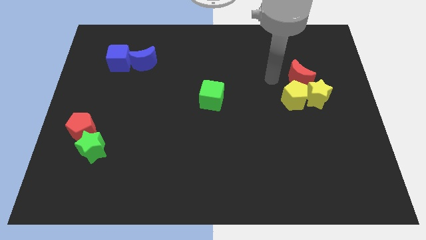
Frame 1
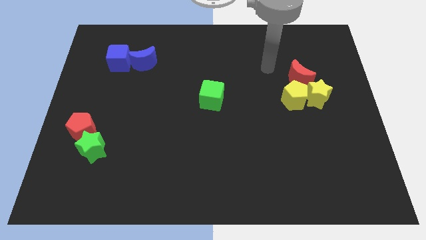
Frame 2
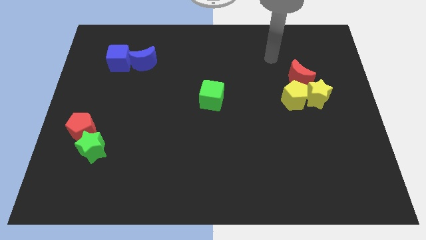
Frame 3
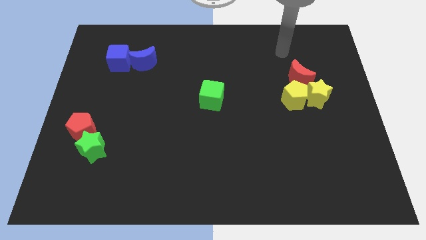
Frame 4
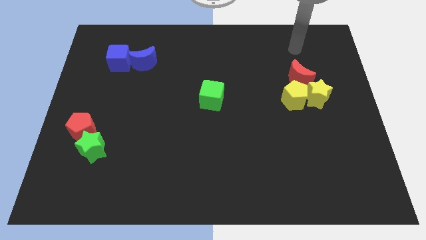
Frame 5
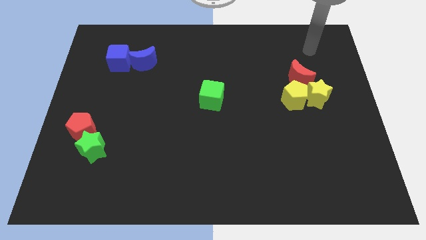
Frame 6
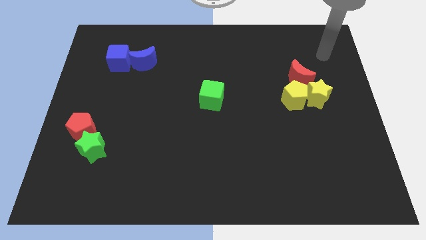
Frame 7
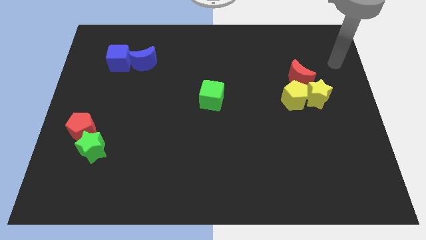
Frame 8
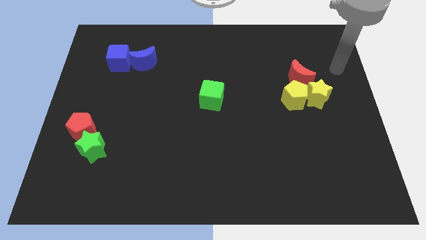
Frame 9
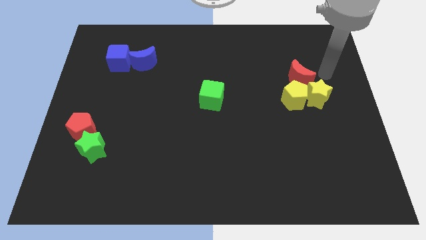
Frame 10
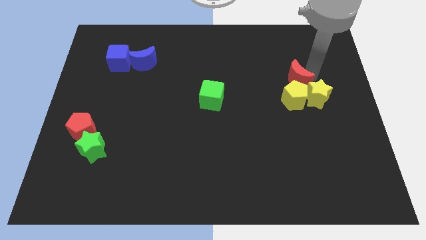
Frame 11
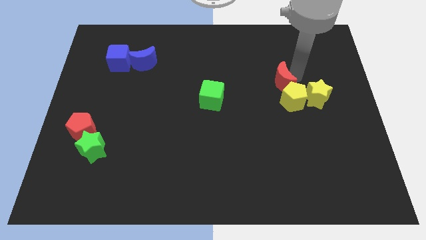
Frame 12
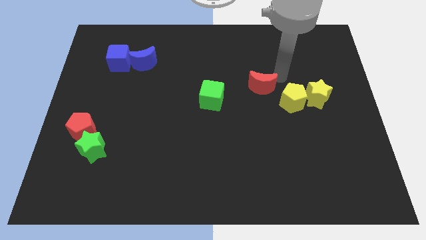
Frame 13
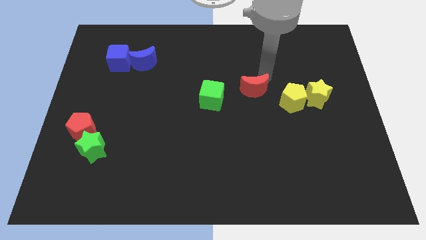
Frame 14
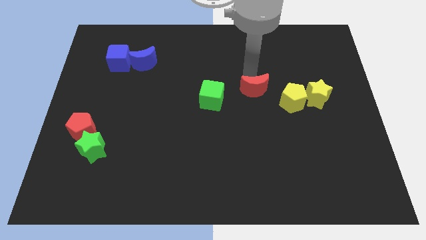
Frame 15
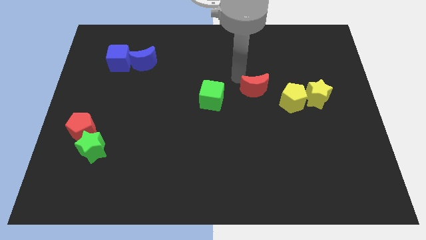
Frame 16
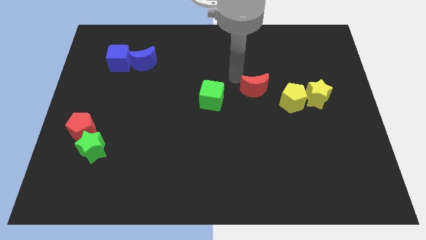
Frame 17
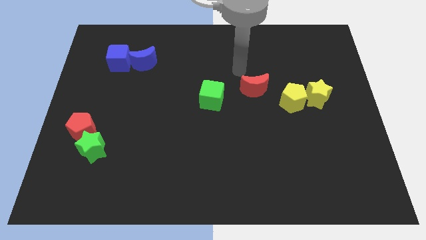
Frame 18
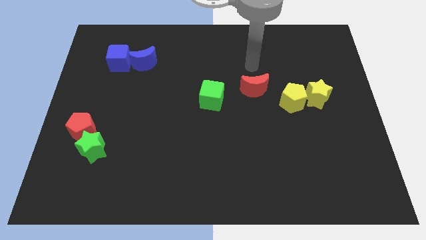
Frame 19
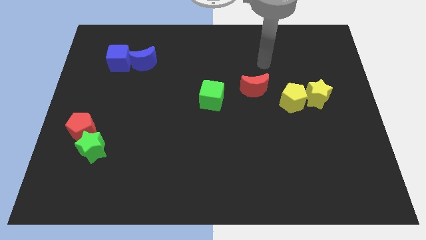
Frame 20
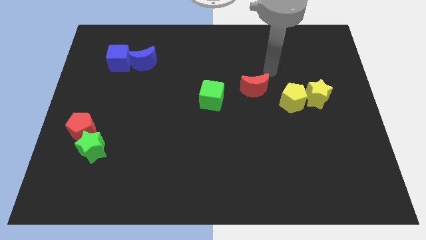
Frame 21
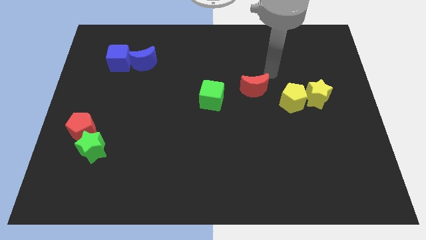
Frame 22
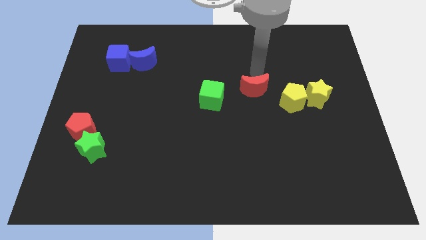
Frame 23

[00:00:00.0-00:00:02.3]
move the red crescent to the left of the yellow pentagon

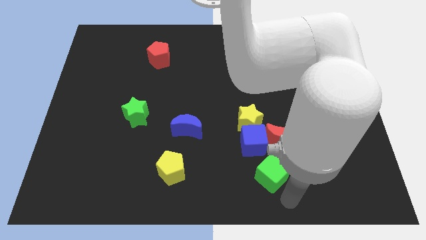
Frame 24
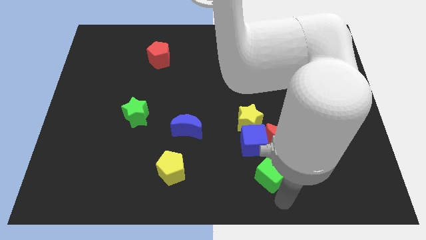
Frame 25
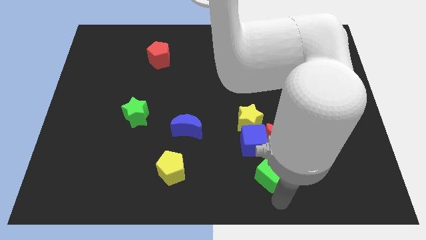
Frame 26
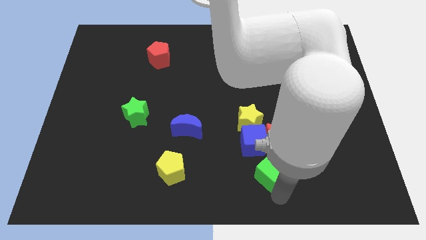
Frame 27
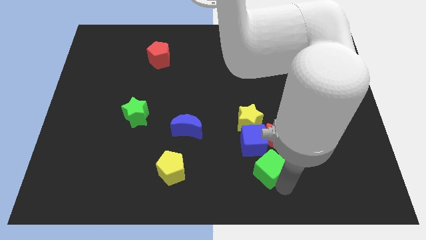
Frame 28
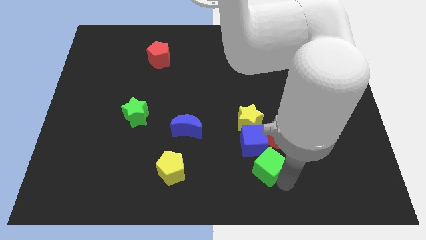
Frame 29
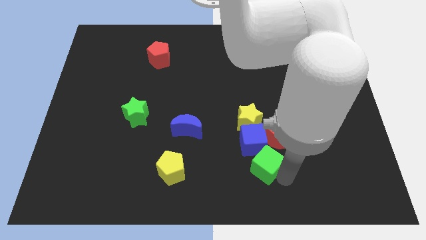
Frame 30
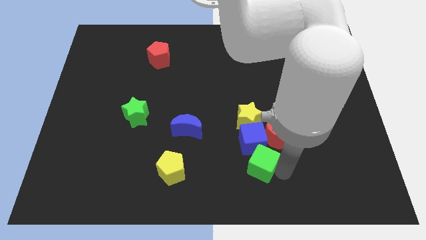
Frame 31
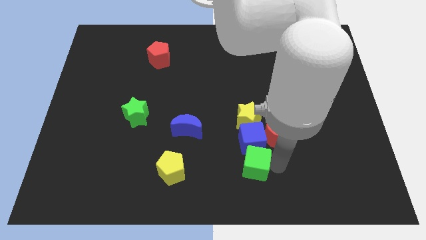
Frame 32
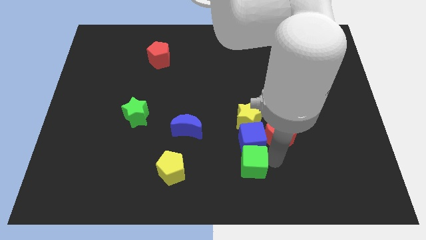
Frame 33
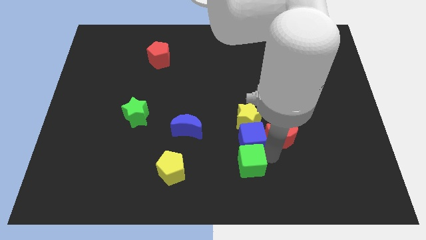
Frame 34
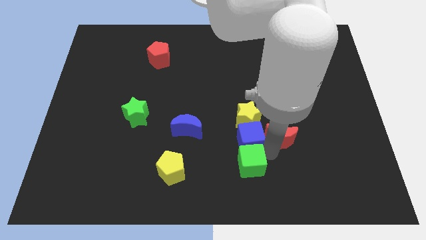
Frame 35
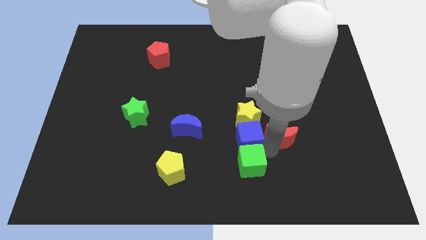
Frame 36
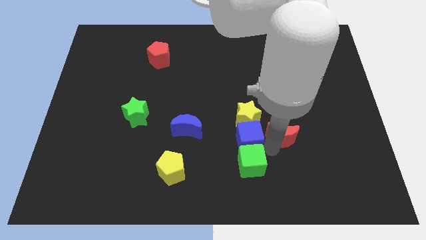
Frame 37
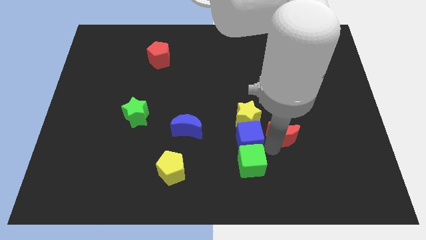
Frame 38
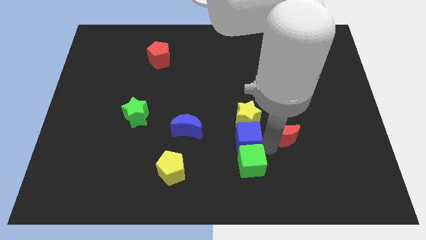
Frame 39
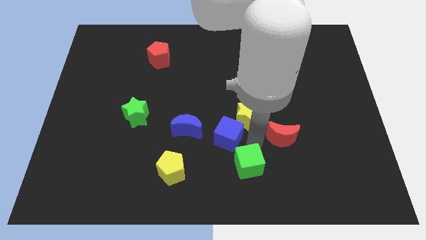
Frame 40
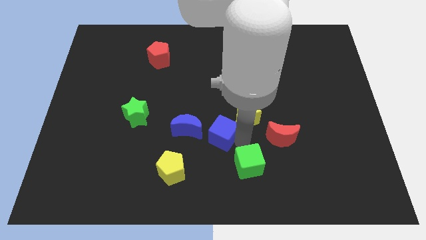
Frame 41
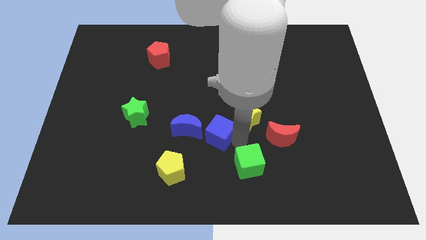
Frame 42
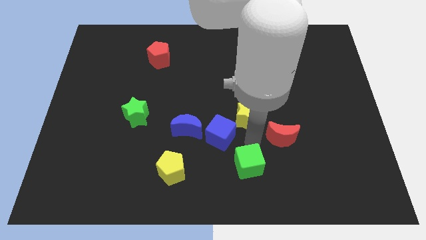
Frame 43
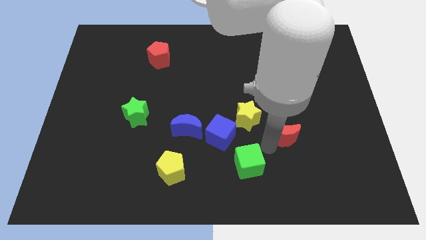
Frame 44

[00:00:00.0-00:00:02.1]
move the green cube upwards

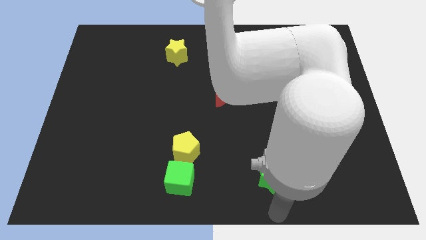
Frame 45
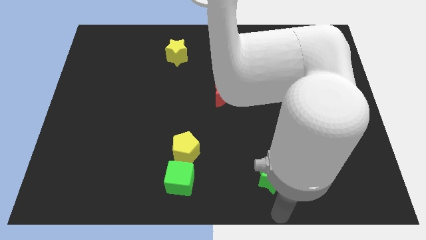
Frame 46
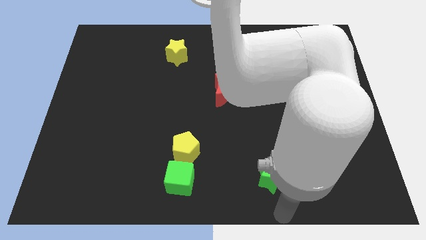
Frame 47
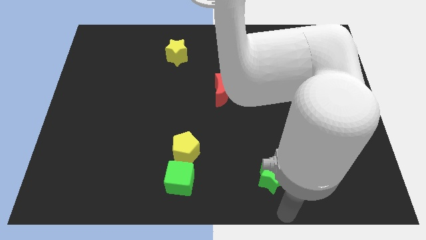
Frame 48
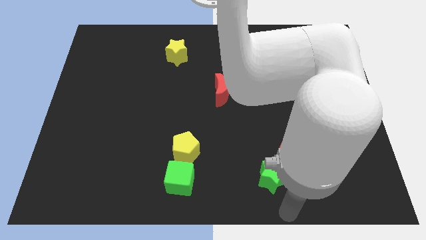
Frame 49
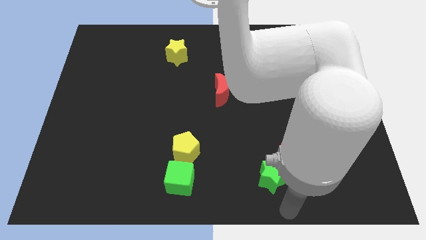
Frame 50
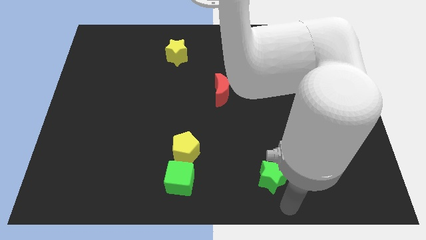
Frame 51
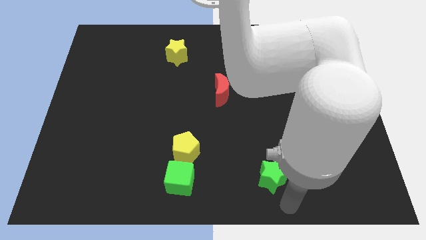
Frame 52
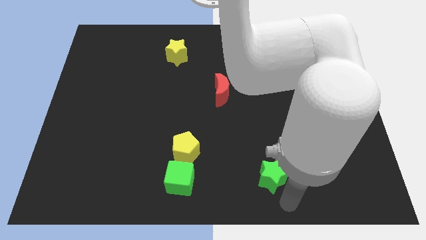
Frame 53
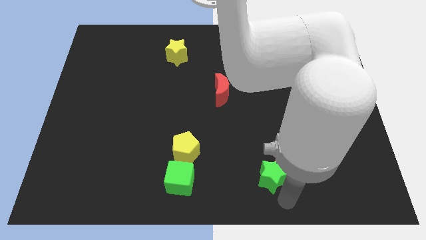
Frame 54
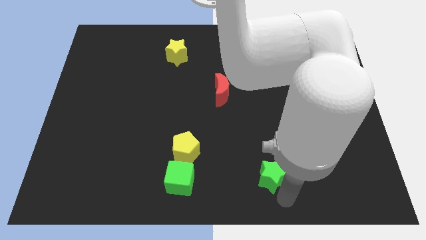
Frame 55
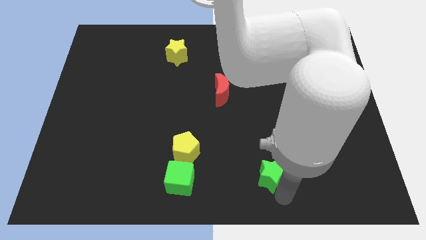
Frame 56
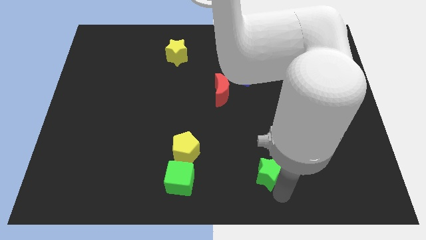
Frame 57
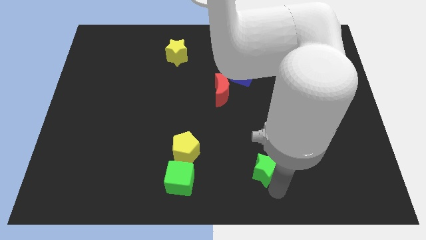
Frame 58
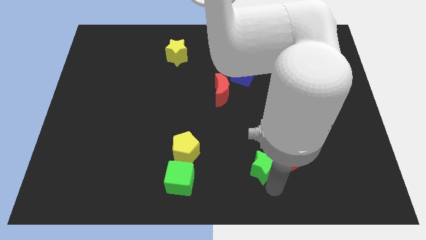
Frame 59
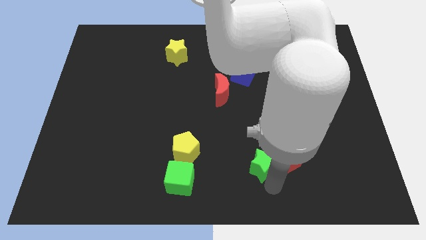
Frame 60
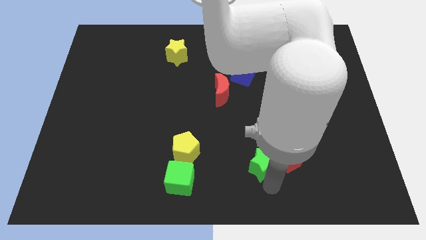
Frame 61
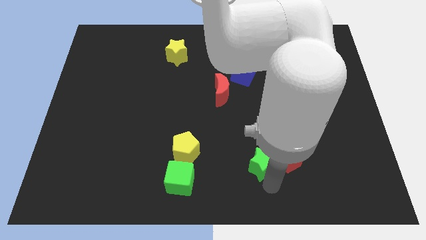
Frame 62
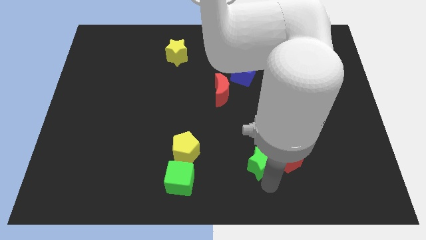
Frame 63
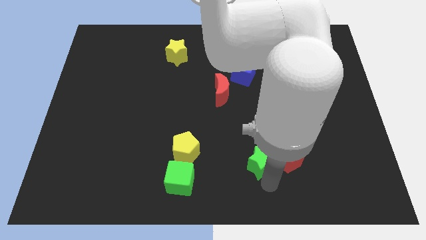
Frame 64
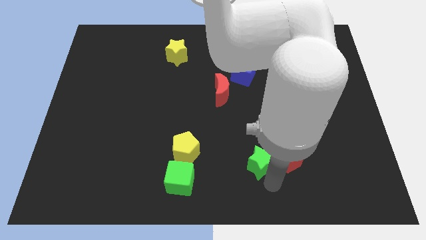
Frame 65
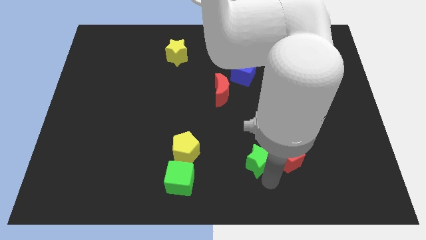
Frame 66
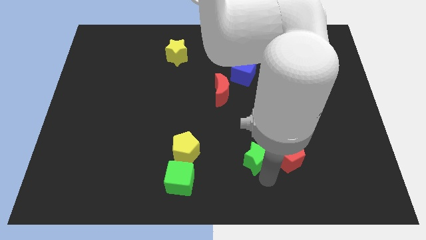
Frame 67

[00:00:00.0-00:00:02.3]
place the green star to the left side of red pentagon

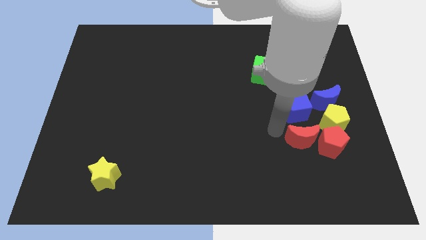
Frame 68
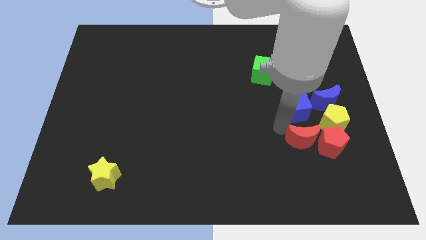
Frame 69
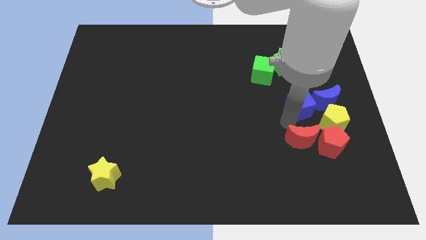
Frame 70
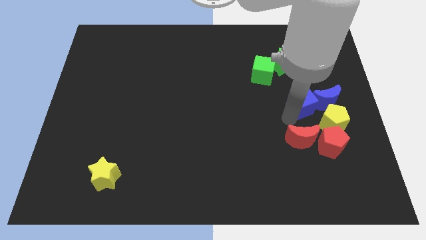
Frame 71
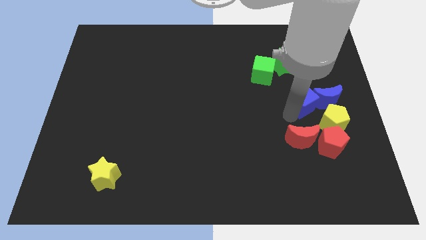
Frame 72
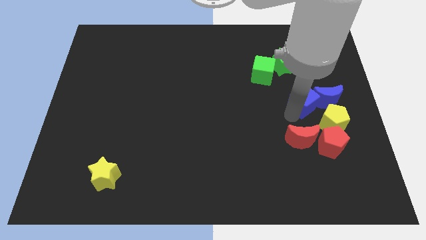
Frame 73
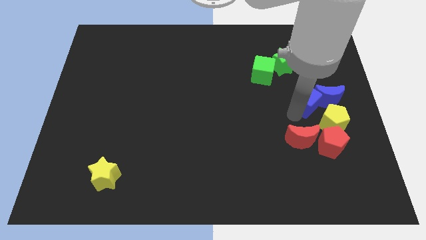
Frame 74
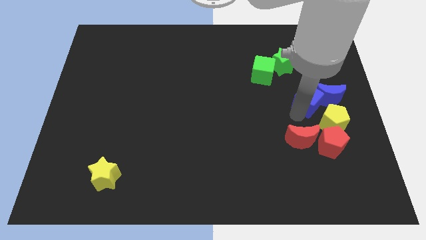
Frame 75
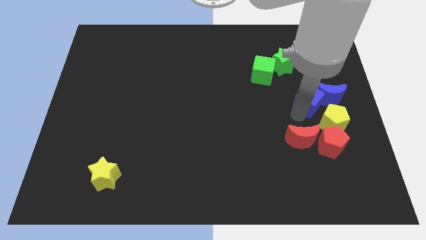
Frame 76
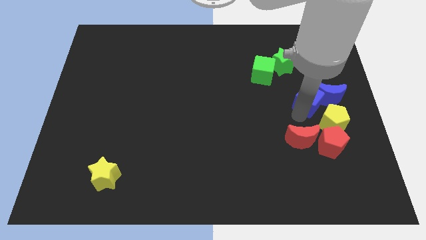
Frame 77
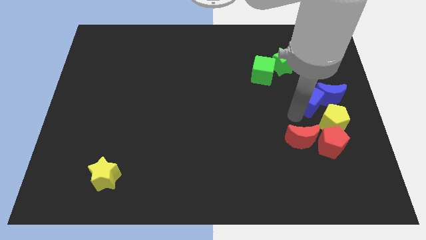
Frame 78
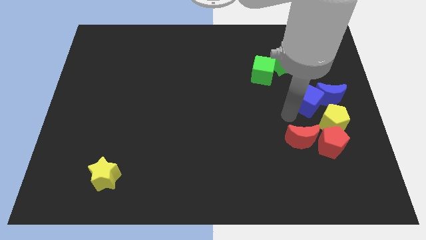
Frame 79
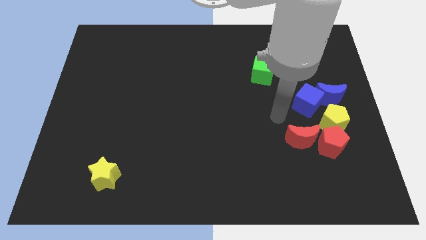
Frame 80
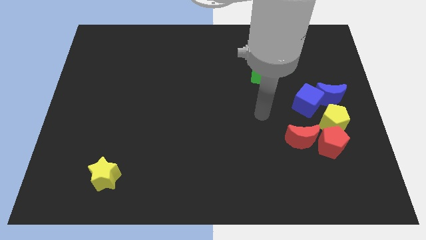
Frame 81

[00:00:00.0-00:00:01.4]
push the blue cube into the blue moon

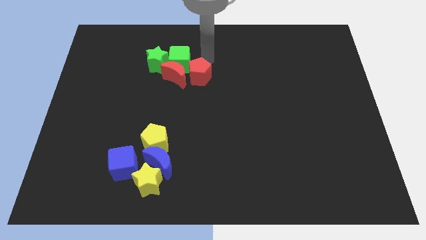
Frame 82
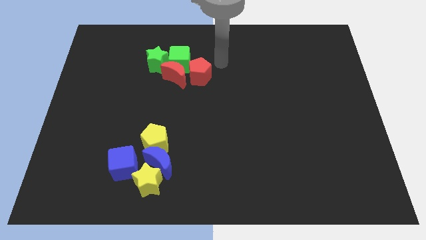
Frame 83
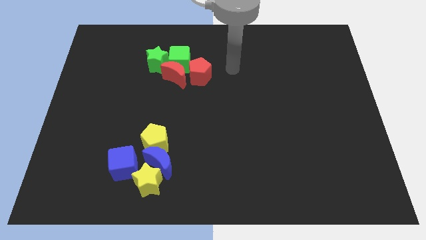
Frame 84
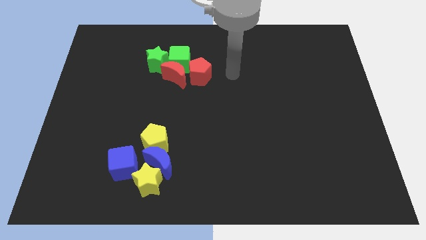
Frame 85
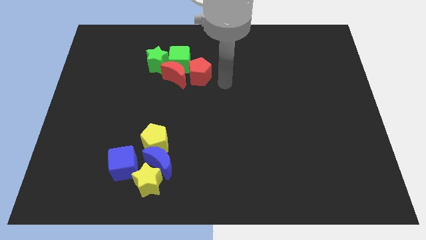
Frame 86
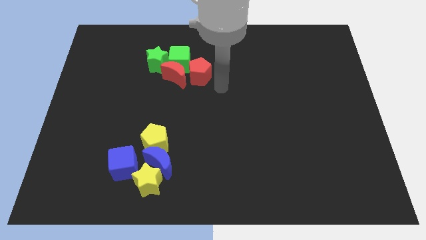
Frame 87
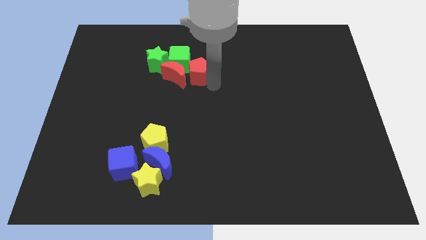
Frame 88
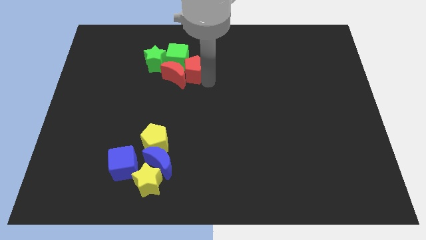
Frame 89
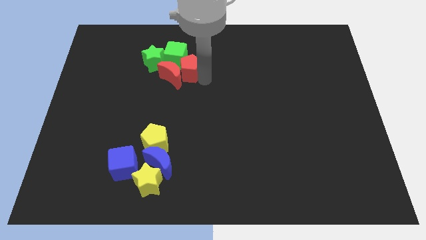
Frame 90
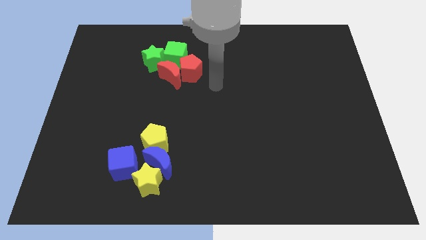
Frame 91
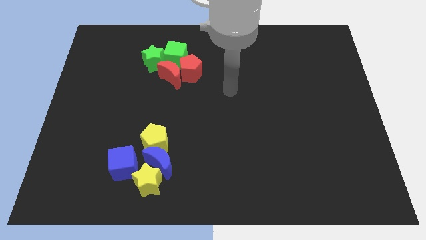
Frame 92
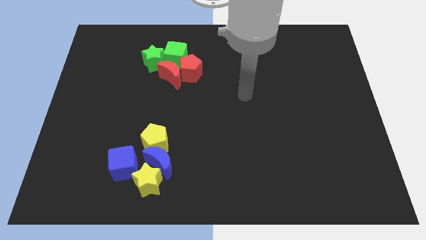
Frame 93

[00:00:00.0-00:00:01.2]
push the red pentagon slightly towards the green cube
